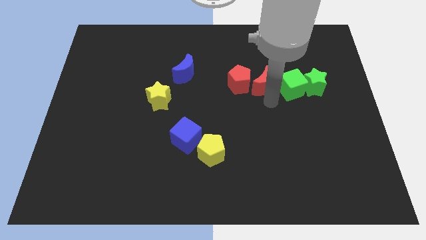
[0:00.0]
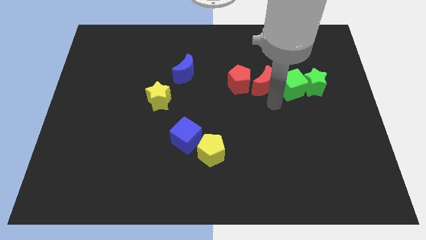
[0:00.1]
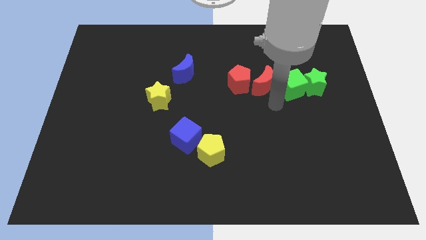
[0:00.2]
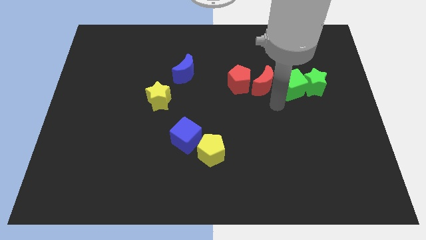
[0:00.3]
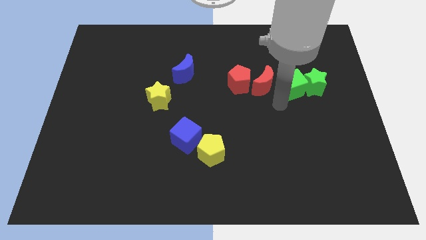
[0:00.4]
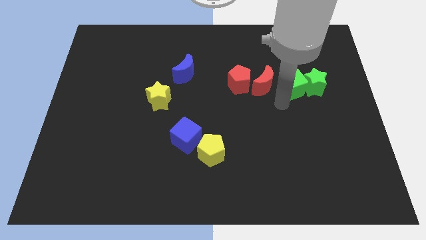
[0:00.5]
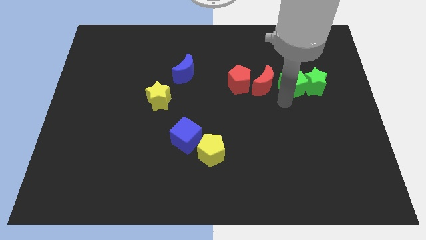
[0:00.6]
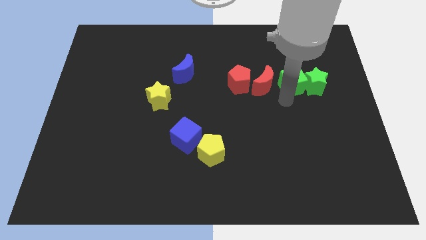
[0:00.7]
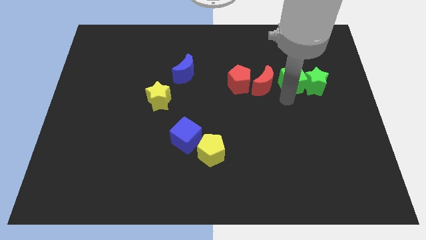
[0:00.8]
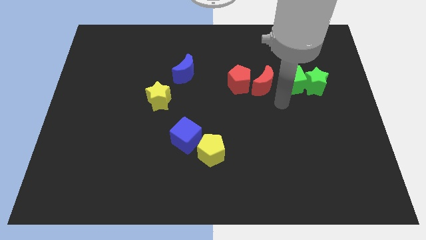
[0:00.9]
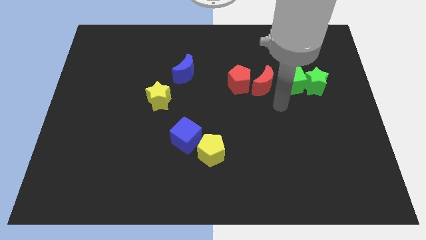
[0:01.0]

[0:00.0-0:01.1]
move the green cube into the green star

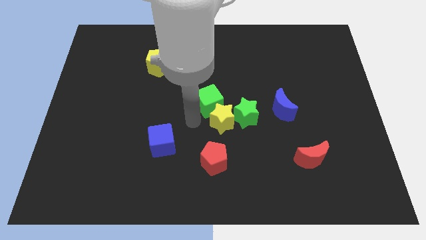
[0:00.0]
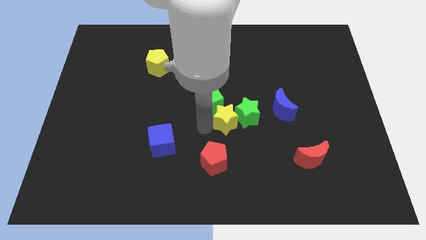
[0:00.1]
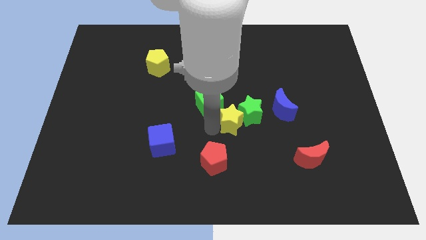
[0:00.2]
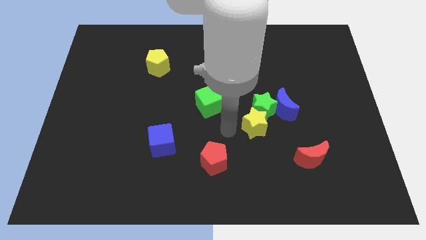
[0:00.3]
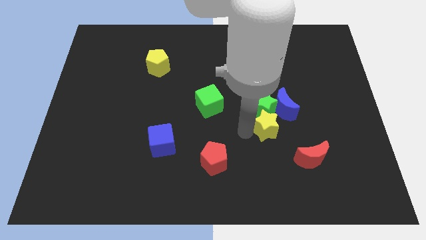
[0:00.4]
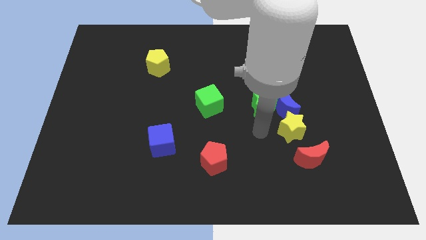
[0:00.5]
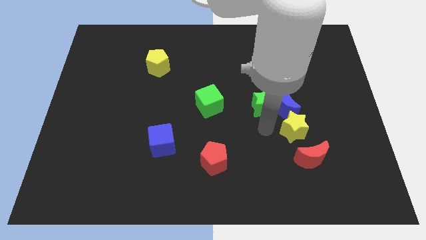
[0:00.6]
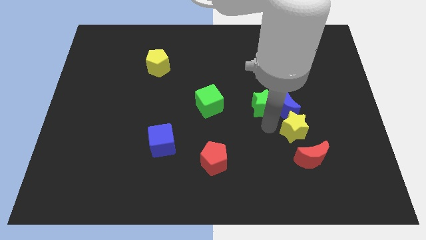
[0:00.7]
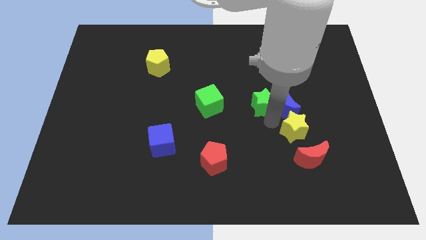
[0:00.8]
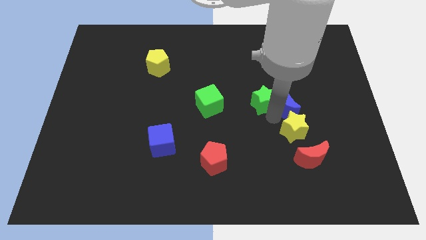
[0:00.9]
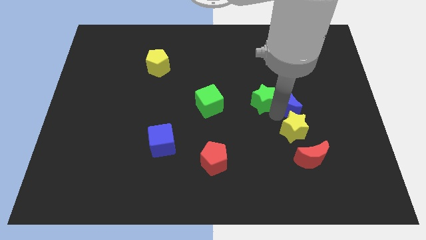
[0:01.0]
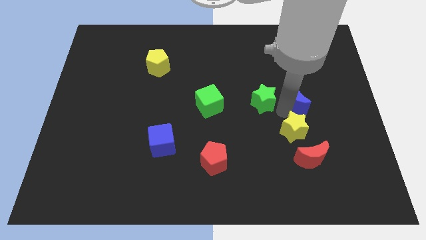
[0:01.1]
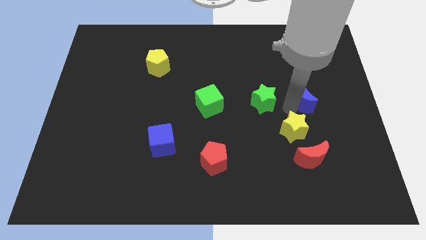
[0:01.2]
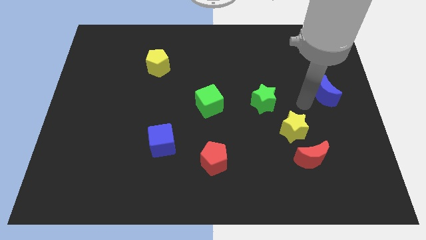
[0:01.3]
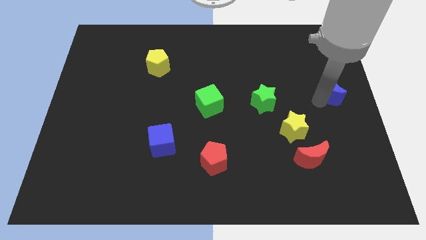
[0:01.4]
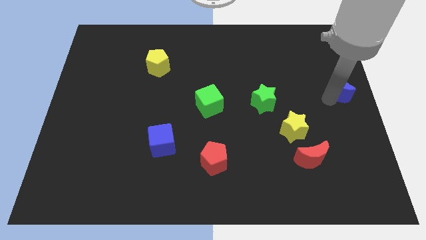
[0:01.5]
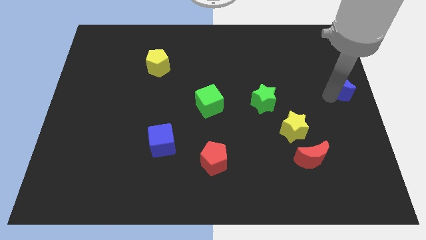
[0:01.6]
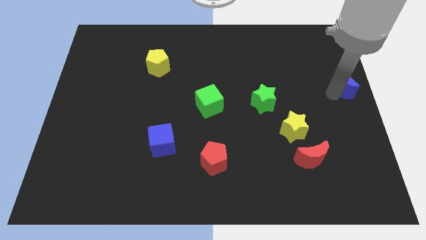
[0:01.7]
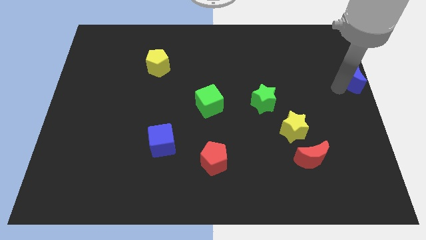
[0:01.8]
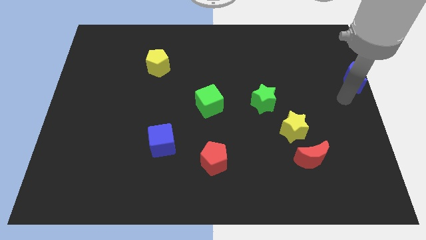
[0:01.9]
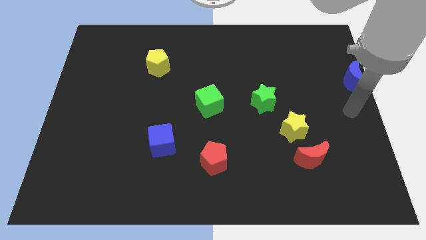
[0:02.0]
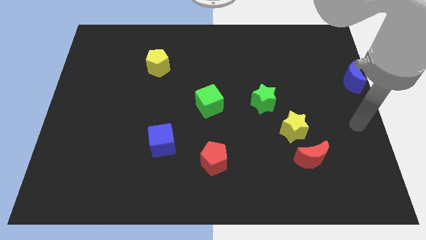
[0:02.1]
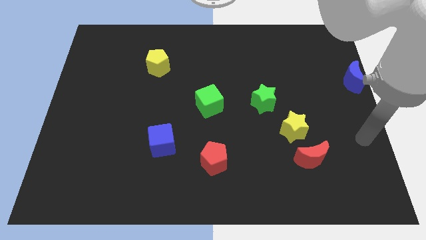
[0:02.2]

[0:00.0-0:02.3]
move the blue moon towards the center right of the board

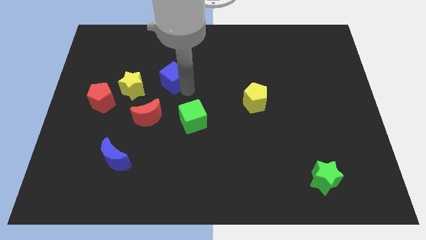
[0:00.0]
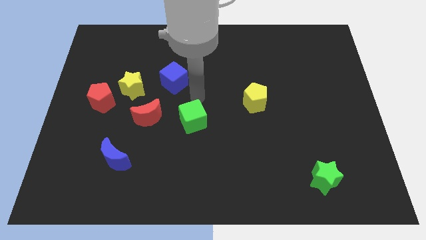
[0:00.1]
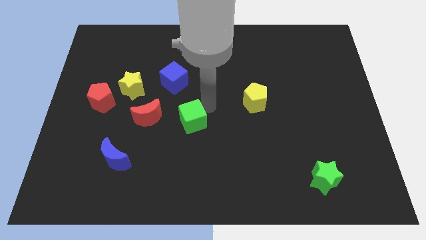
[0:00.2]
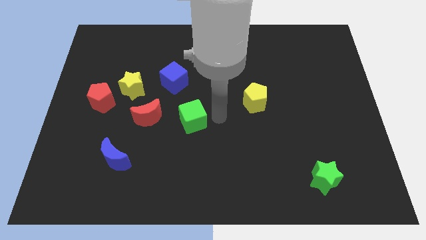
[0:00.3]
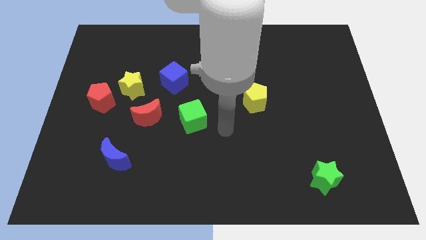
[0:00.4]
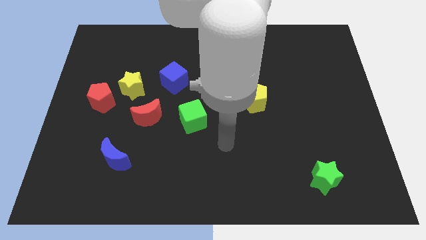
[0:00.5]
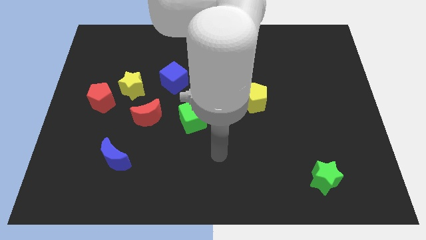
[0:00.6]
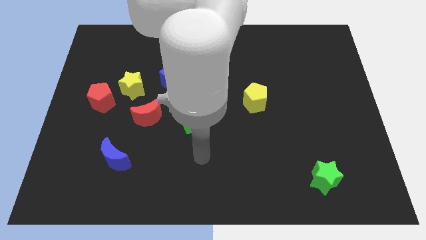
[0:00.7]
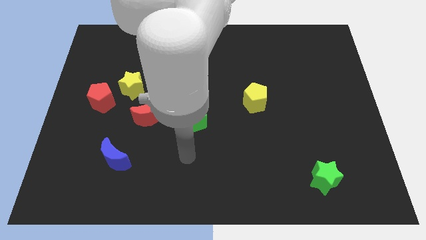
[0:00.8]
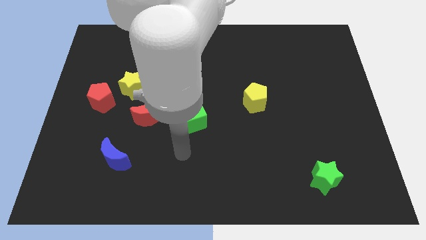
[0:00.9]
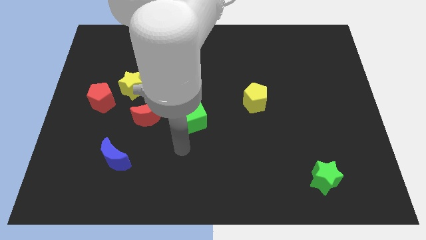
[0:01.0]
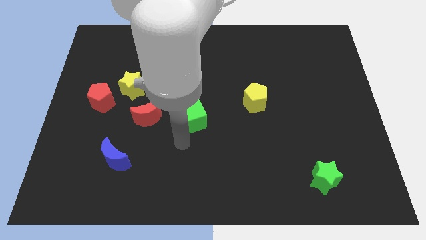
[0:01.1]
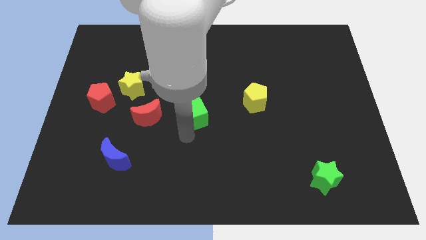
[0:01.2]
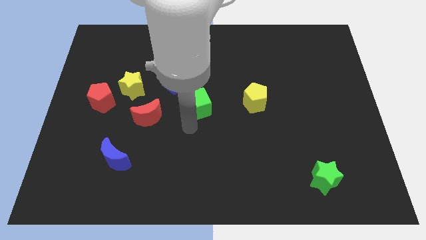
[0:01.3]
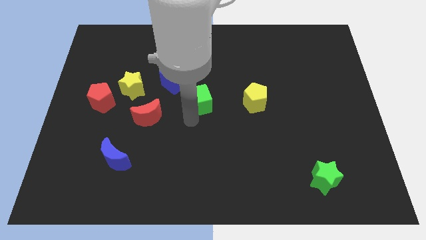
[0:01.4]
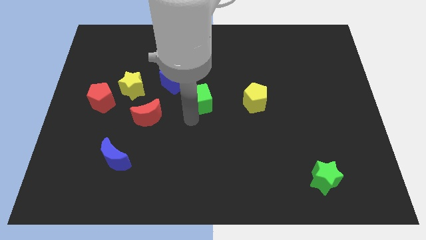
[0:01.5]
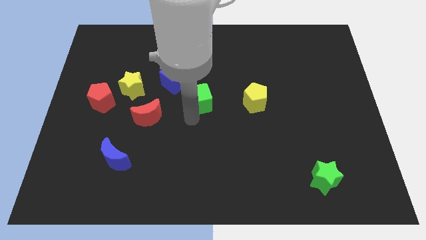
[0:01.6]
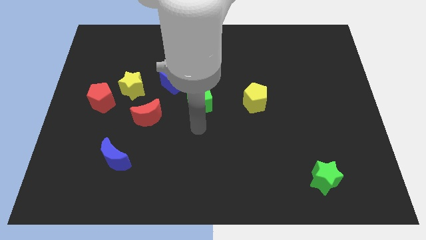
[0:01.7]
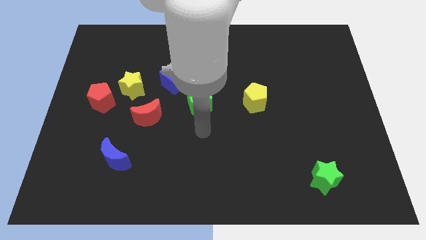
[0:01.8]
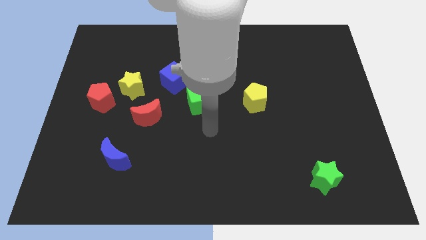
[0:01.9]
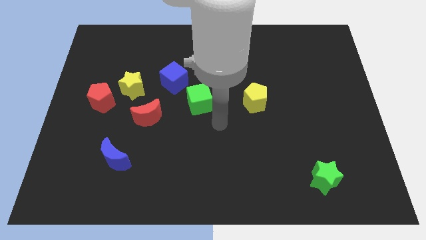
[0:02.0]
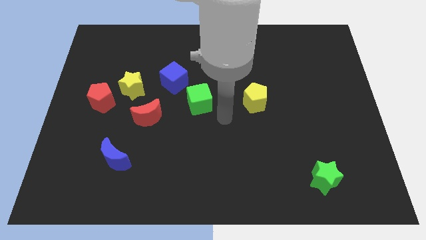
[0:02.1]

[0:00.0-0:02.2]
push the green cube to the left of yellow pentagon

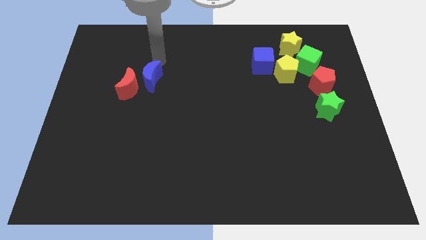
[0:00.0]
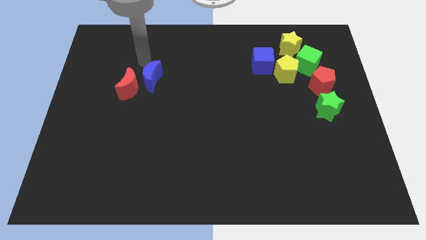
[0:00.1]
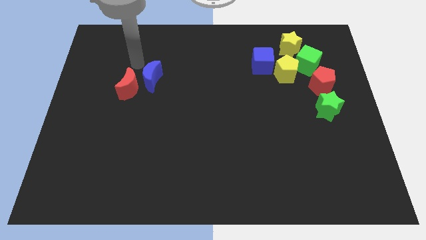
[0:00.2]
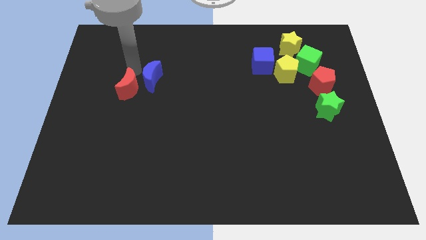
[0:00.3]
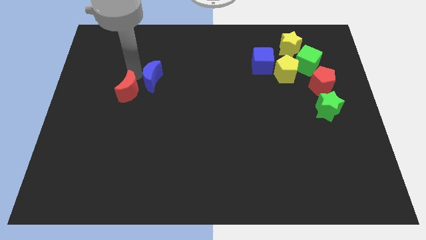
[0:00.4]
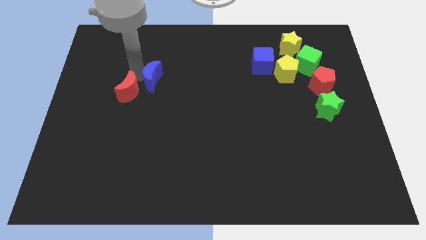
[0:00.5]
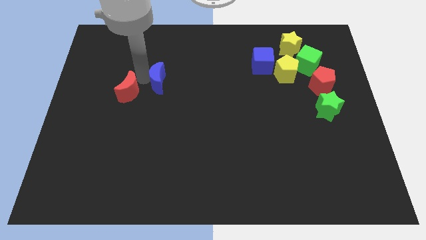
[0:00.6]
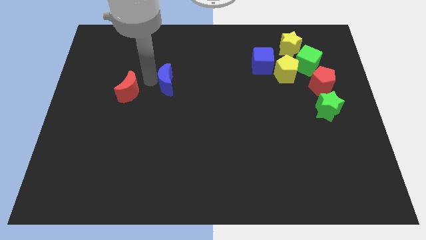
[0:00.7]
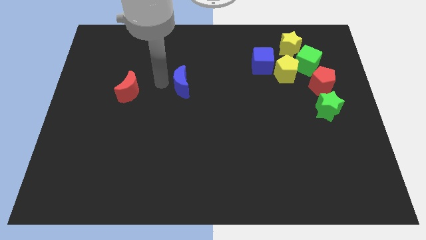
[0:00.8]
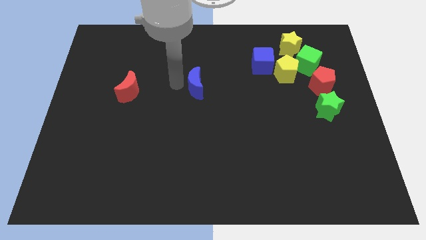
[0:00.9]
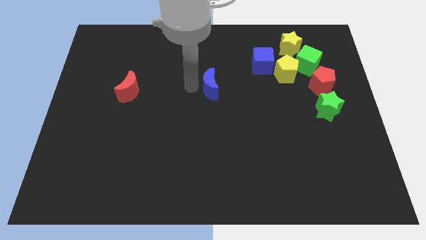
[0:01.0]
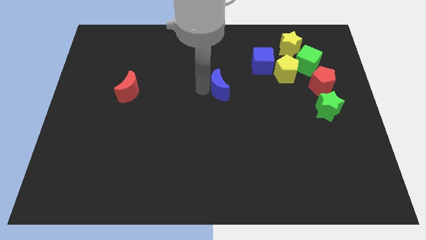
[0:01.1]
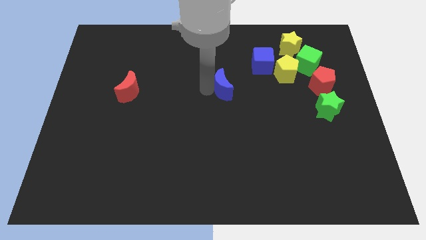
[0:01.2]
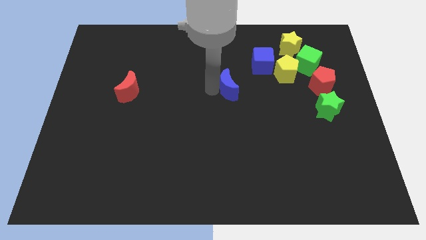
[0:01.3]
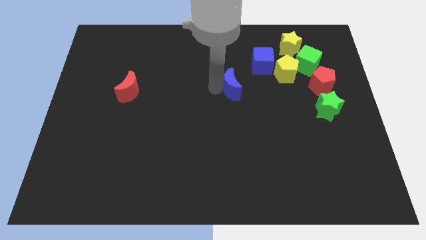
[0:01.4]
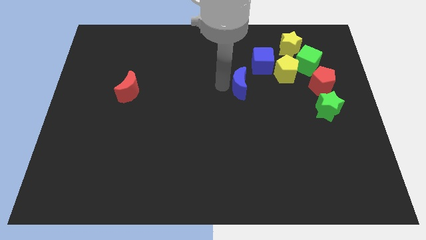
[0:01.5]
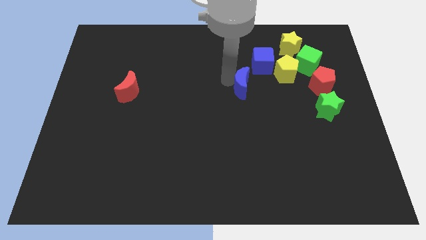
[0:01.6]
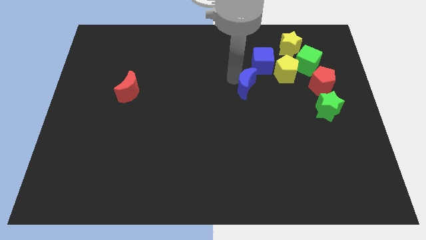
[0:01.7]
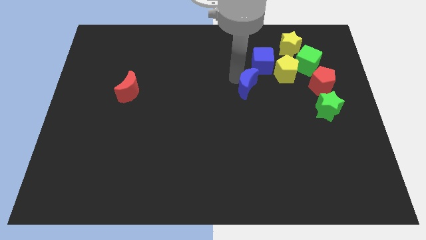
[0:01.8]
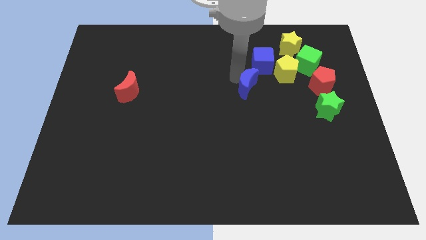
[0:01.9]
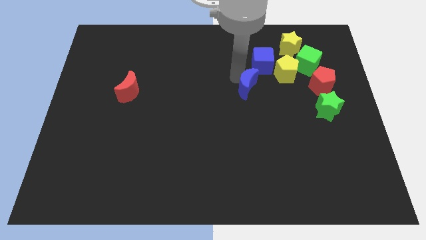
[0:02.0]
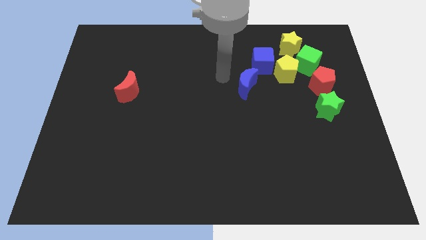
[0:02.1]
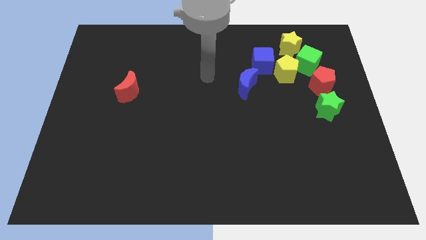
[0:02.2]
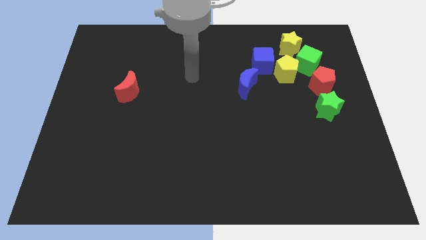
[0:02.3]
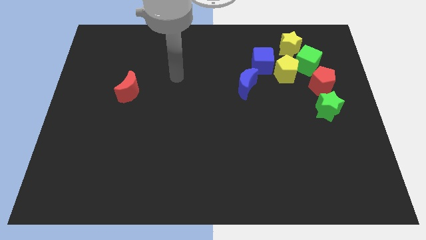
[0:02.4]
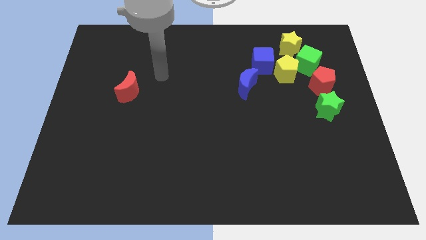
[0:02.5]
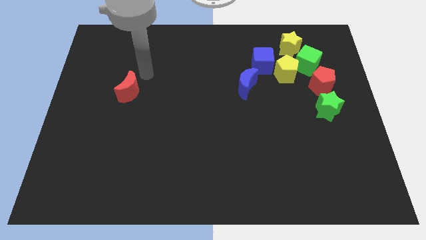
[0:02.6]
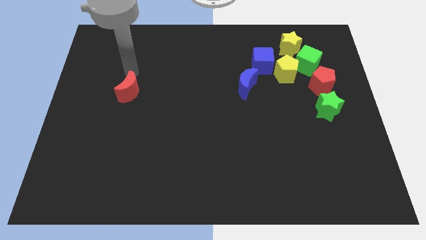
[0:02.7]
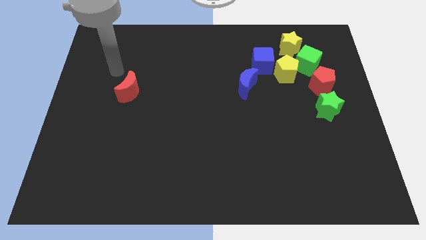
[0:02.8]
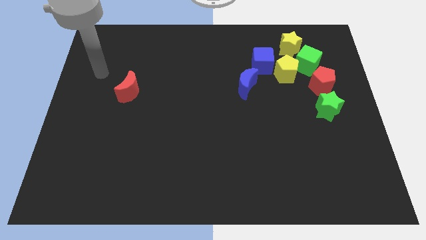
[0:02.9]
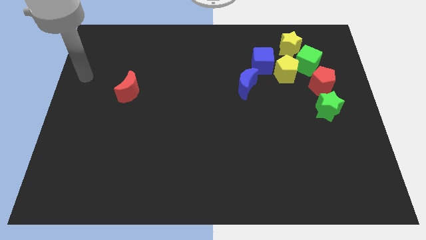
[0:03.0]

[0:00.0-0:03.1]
put the blue moon at the bottom left of the blue cube

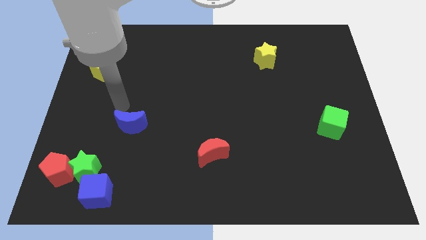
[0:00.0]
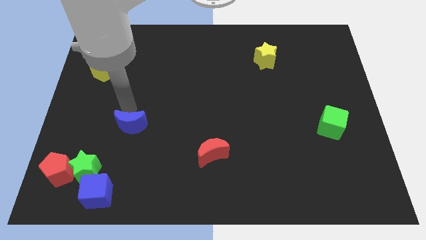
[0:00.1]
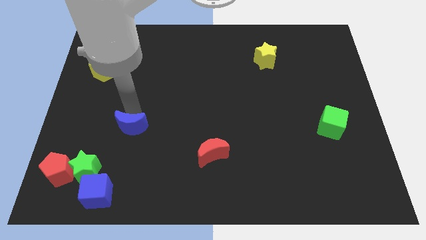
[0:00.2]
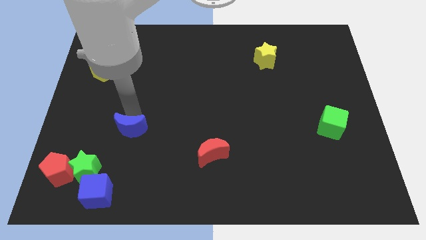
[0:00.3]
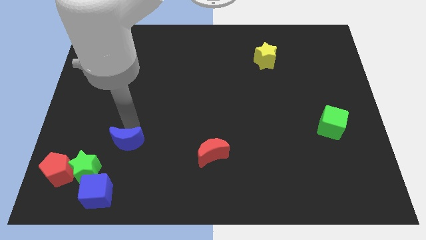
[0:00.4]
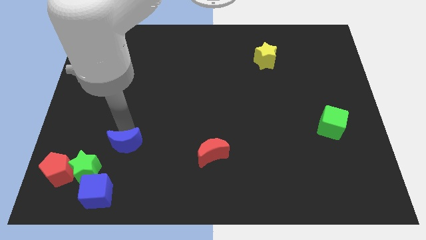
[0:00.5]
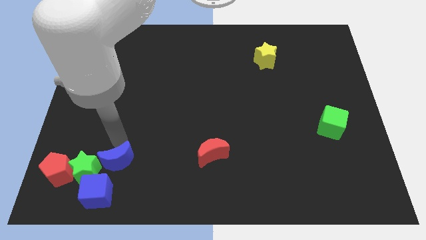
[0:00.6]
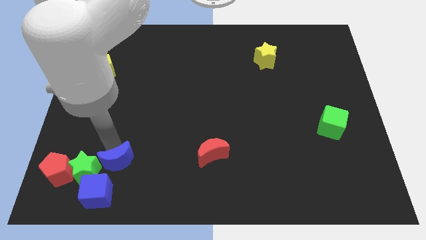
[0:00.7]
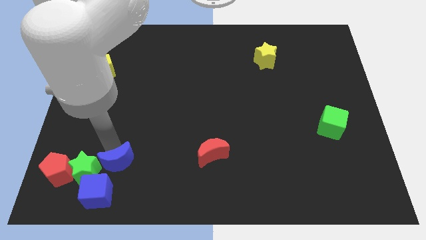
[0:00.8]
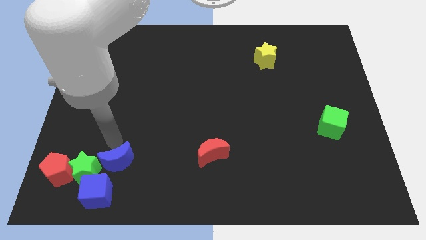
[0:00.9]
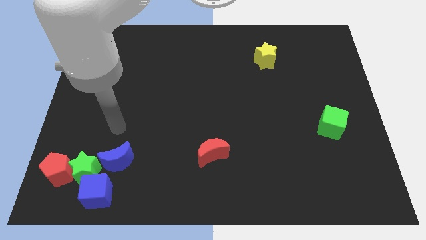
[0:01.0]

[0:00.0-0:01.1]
move blue moon towards blue cube
